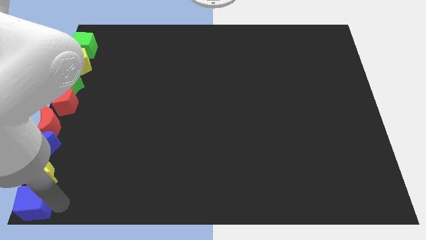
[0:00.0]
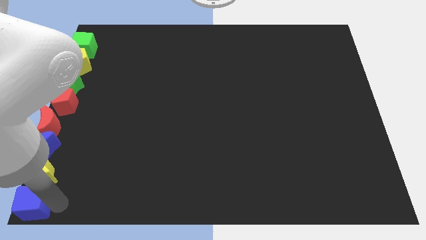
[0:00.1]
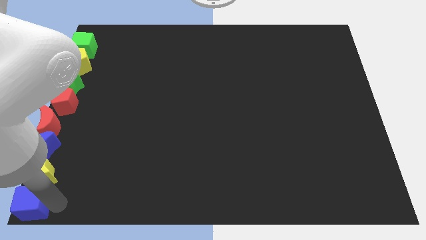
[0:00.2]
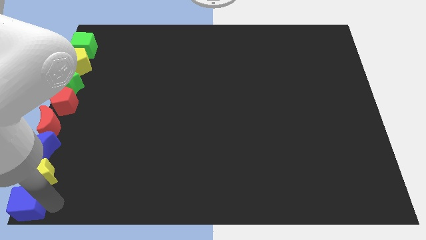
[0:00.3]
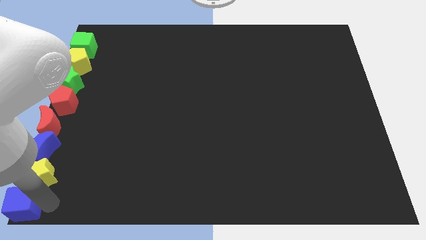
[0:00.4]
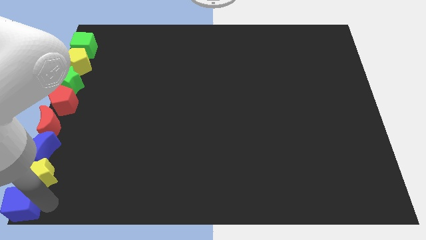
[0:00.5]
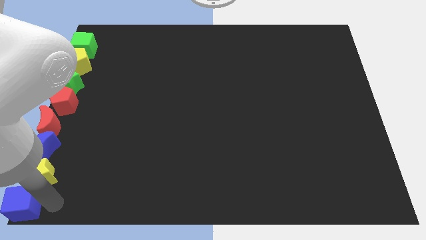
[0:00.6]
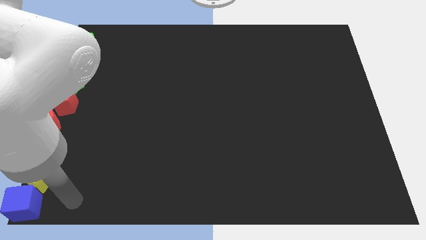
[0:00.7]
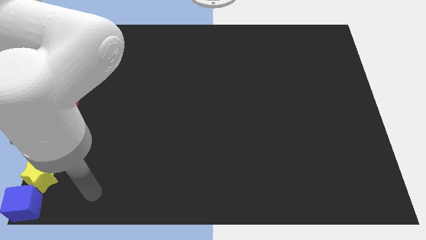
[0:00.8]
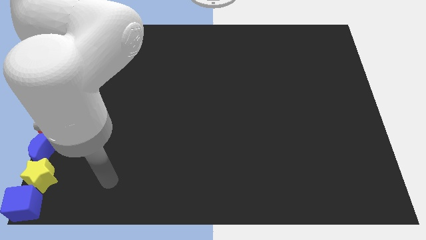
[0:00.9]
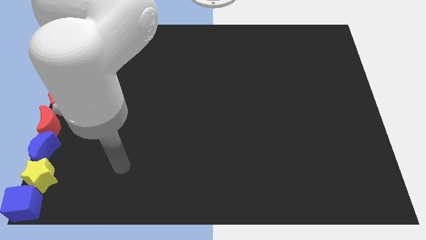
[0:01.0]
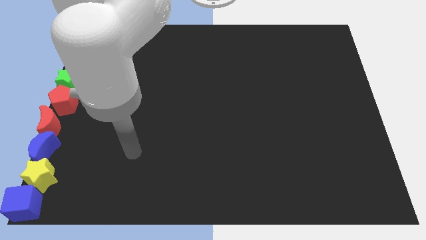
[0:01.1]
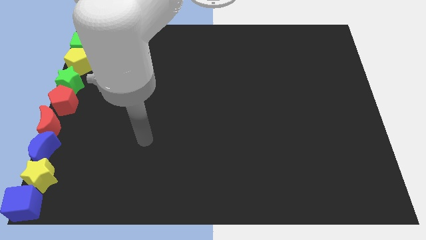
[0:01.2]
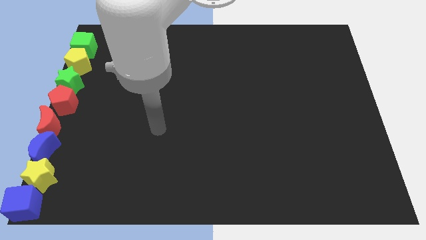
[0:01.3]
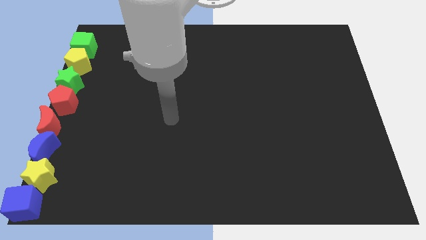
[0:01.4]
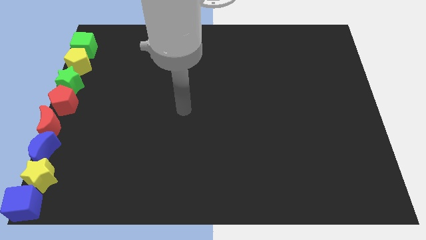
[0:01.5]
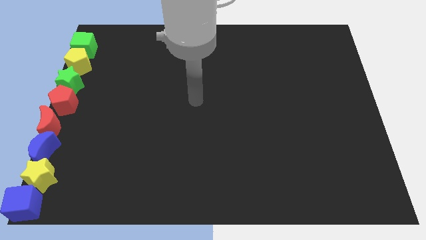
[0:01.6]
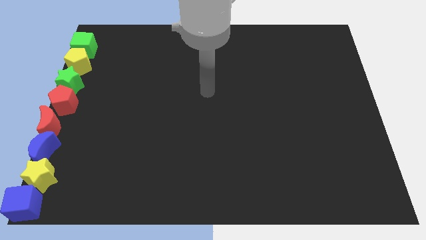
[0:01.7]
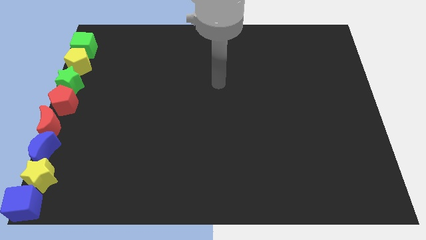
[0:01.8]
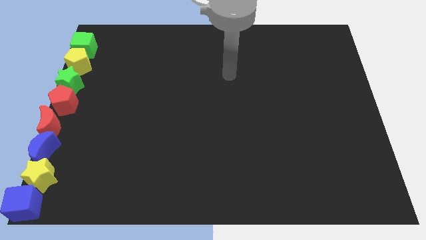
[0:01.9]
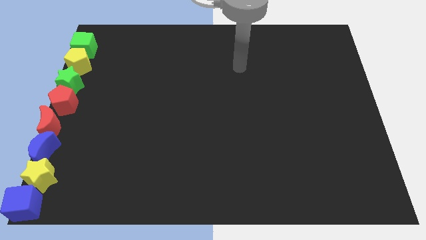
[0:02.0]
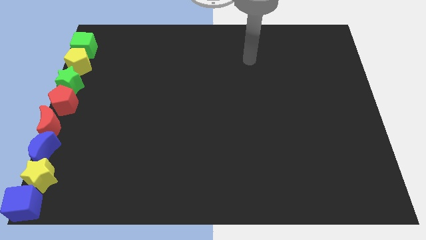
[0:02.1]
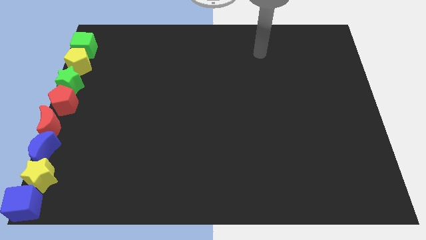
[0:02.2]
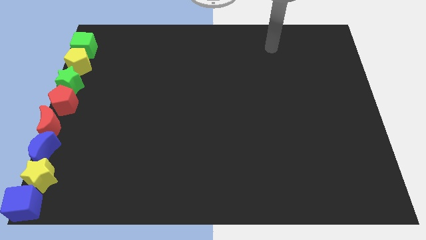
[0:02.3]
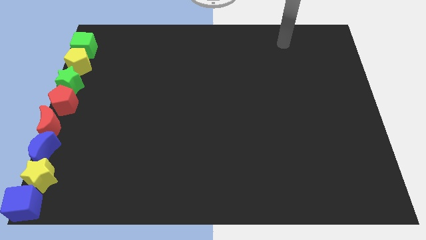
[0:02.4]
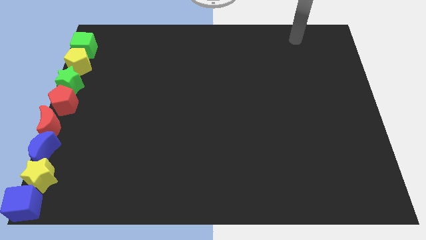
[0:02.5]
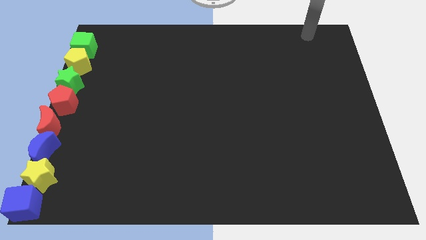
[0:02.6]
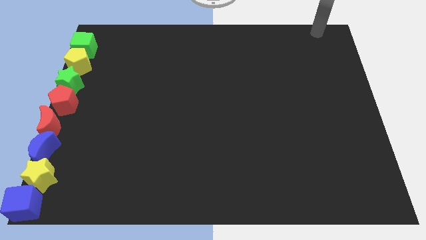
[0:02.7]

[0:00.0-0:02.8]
arrange all the blocks in a vertical line

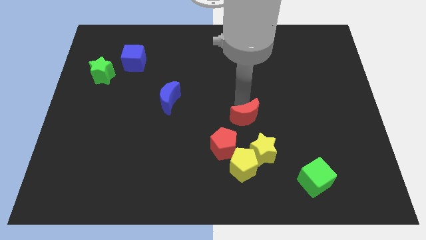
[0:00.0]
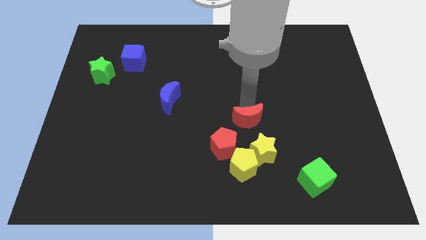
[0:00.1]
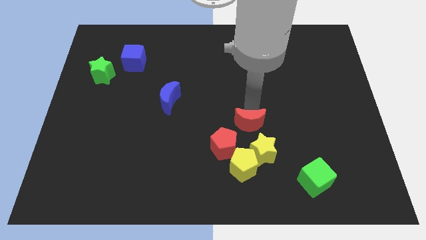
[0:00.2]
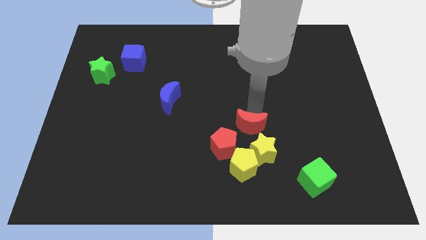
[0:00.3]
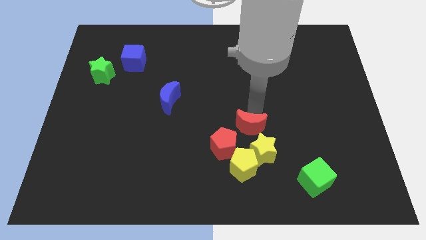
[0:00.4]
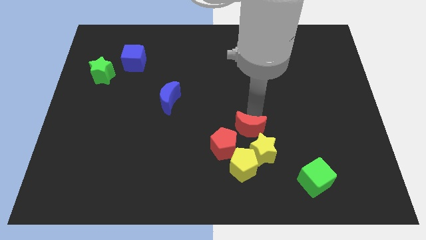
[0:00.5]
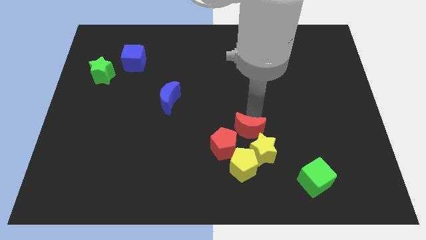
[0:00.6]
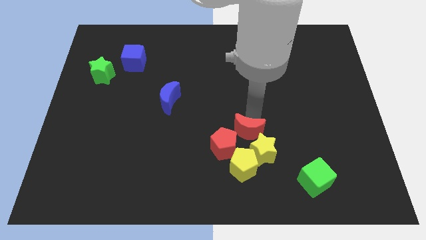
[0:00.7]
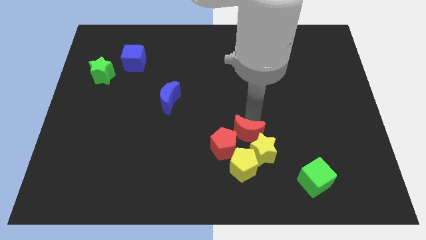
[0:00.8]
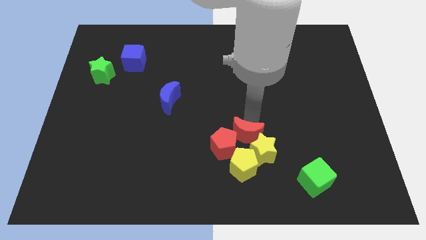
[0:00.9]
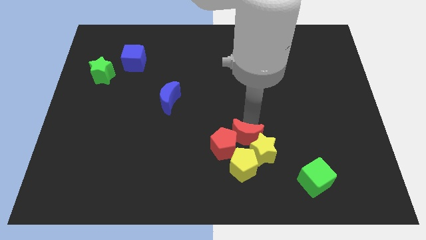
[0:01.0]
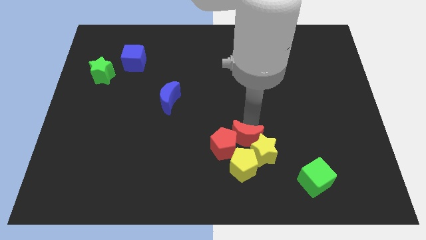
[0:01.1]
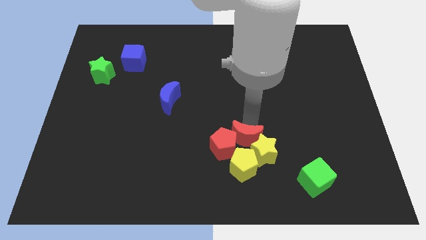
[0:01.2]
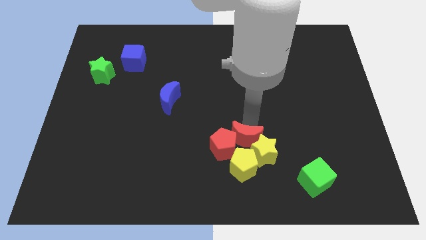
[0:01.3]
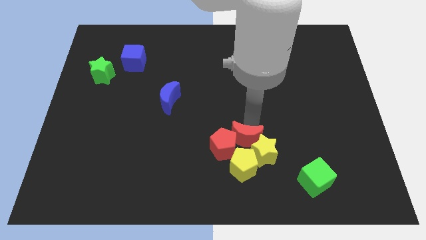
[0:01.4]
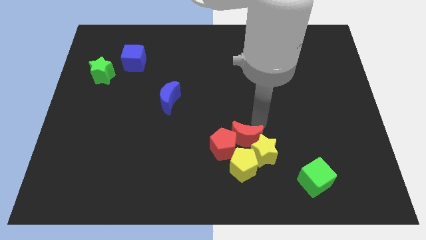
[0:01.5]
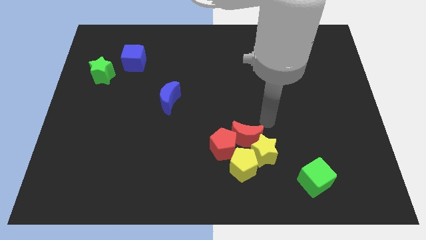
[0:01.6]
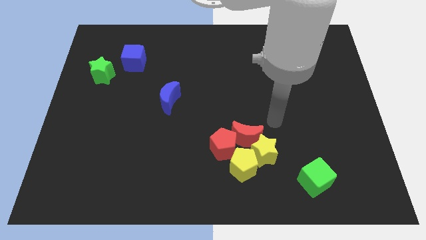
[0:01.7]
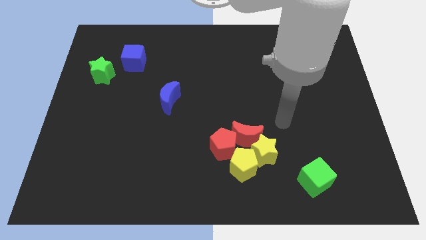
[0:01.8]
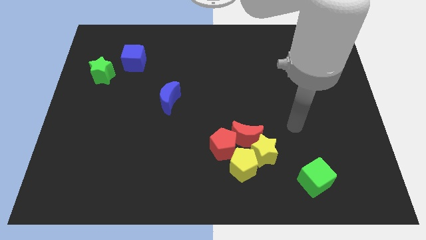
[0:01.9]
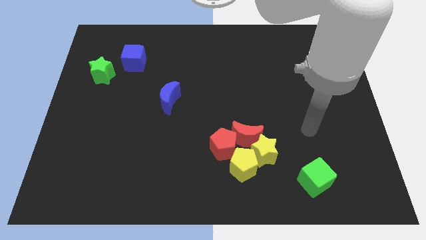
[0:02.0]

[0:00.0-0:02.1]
slide the red moon into the red yellow blocks

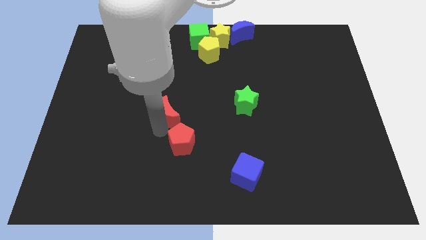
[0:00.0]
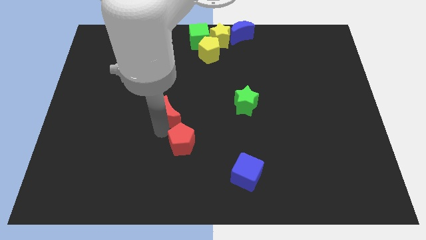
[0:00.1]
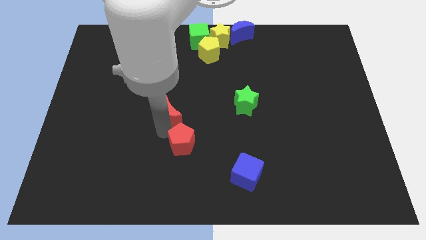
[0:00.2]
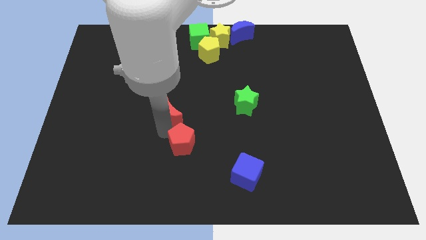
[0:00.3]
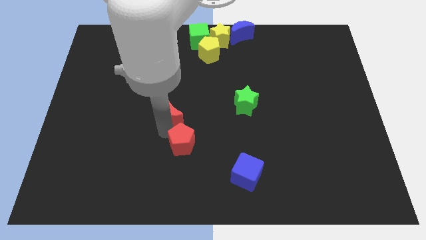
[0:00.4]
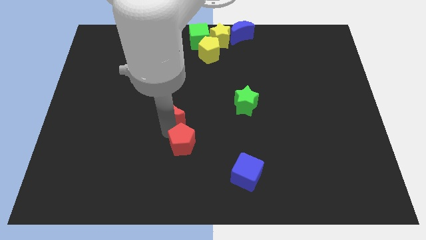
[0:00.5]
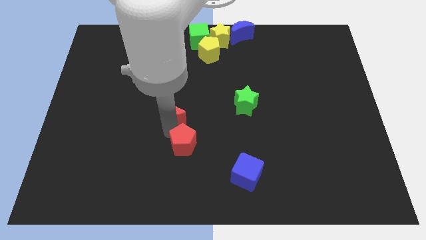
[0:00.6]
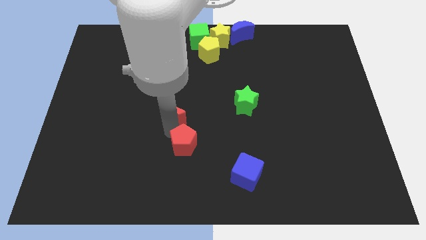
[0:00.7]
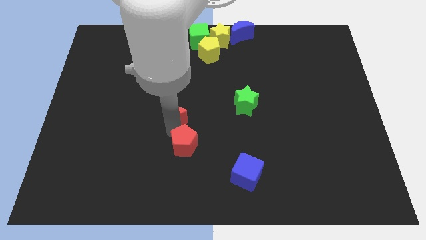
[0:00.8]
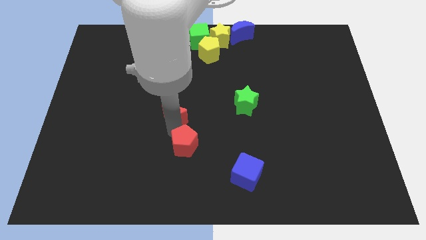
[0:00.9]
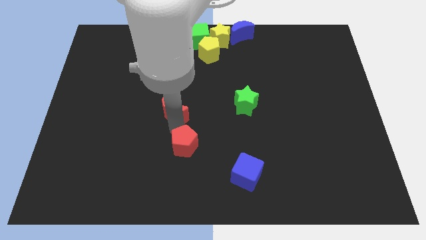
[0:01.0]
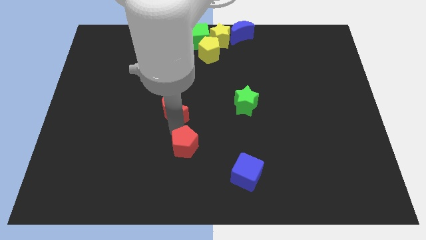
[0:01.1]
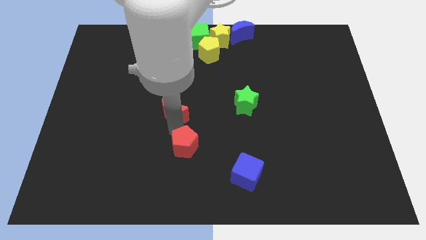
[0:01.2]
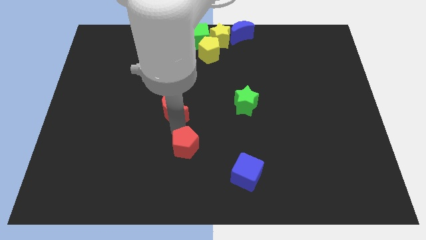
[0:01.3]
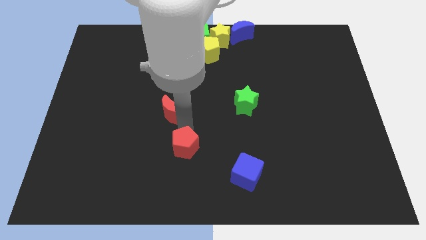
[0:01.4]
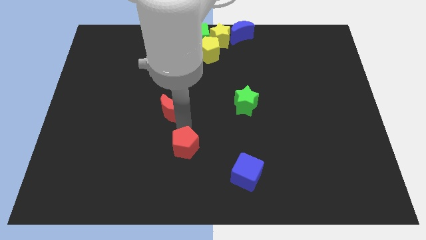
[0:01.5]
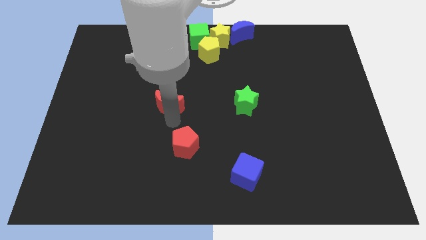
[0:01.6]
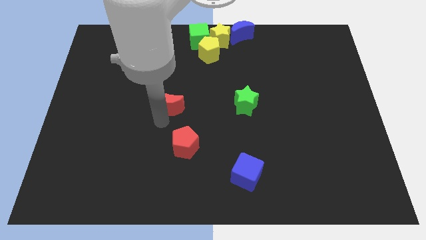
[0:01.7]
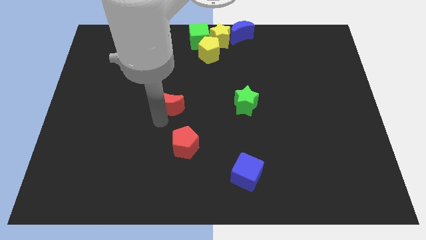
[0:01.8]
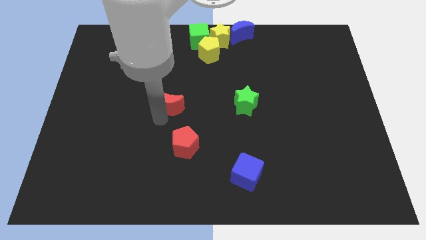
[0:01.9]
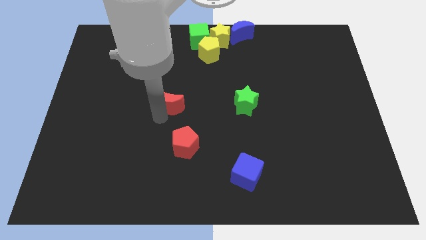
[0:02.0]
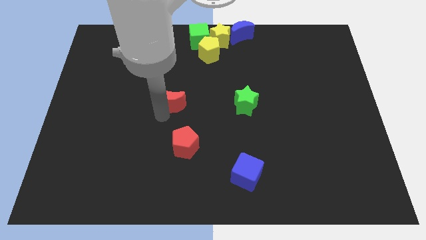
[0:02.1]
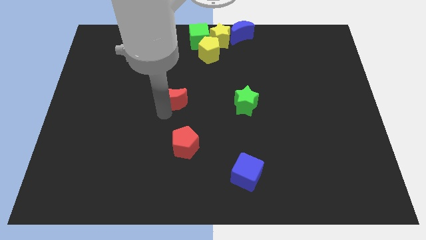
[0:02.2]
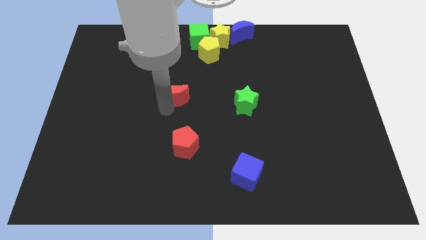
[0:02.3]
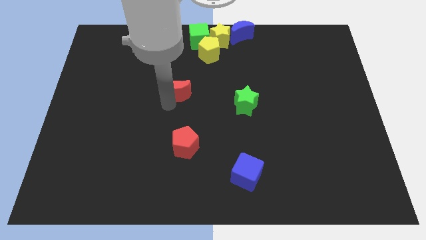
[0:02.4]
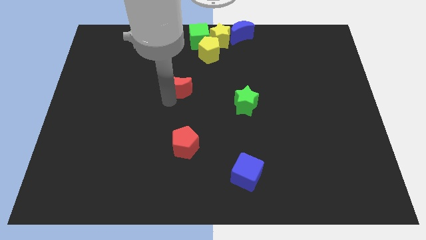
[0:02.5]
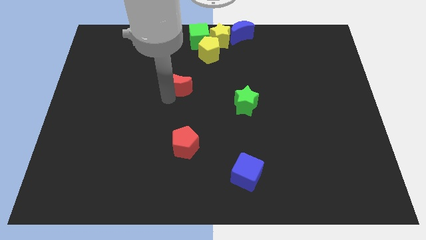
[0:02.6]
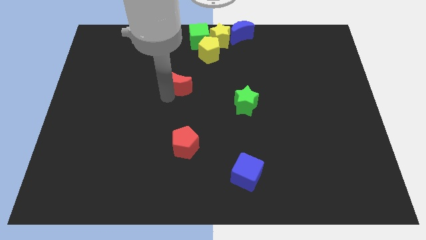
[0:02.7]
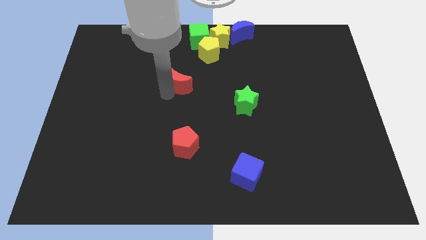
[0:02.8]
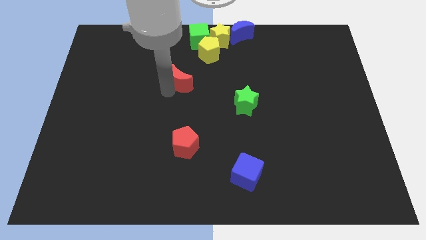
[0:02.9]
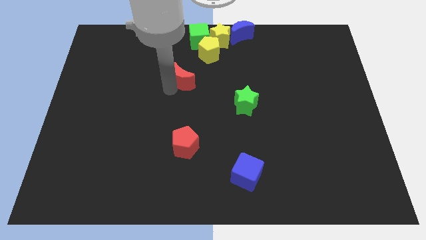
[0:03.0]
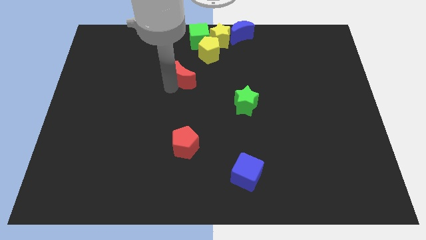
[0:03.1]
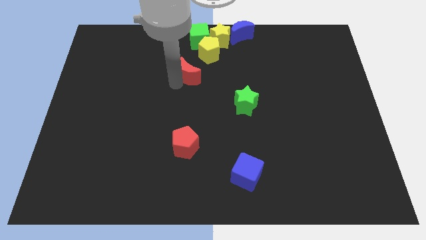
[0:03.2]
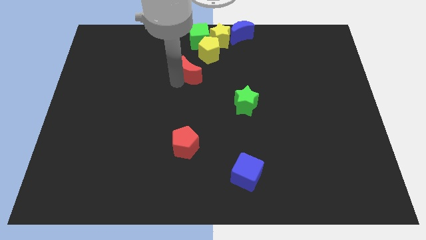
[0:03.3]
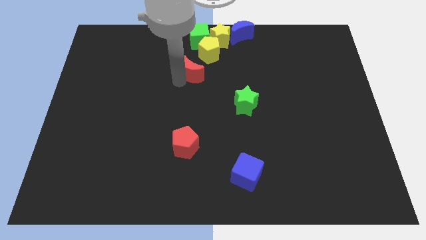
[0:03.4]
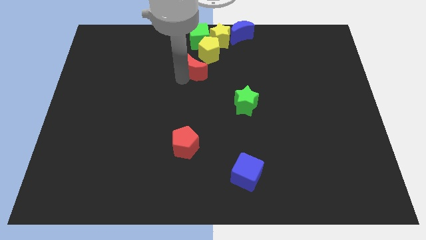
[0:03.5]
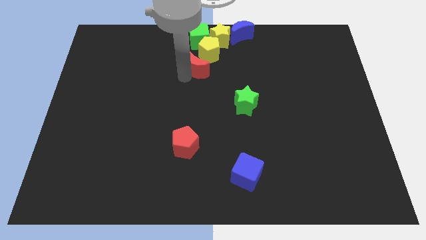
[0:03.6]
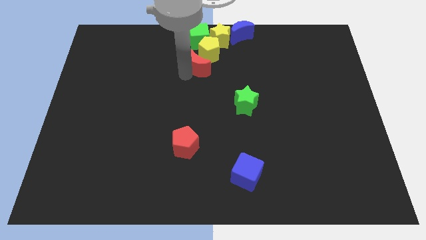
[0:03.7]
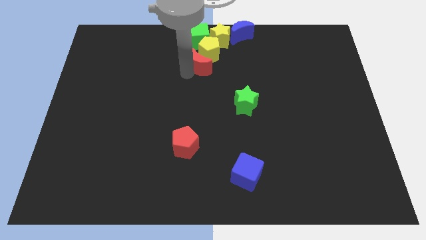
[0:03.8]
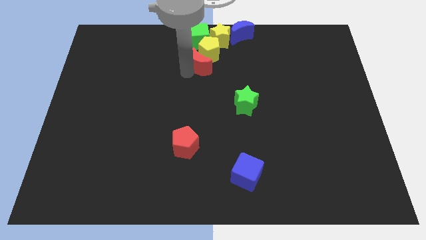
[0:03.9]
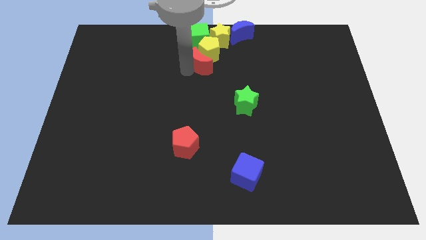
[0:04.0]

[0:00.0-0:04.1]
move the red crescent to the yellow pentagon
